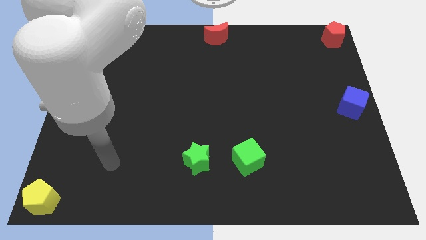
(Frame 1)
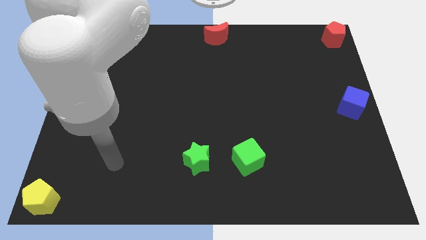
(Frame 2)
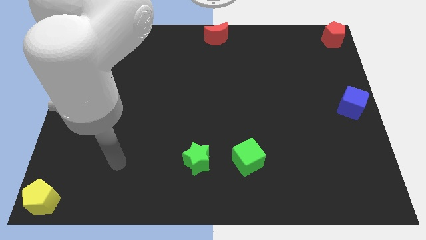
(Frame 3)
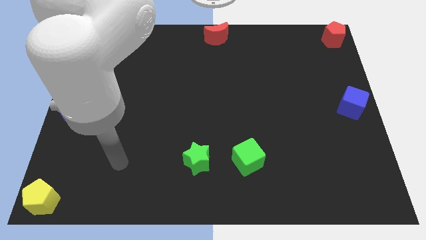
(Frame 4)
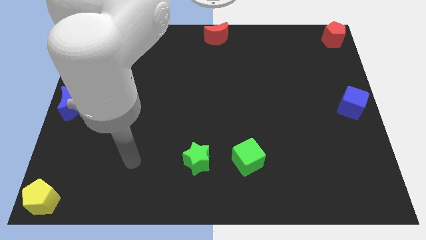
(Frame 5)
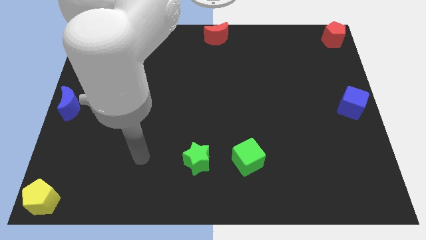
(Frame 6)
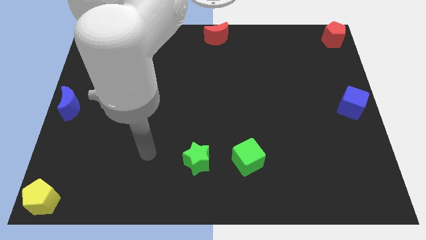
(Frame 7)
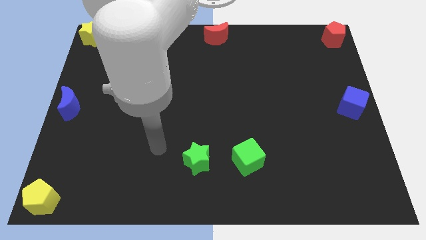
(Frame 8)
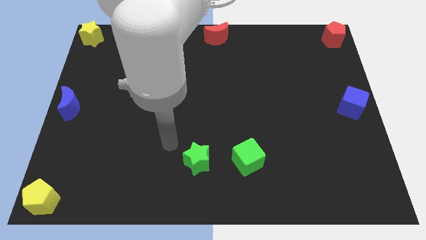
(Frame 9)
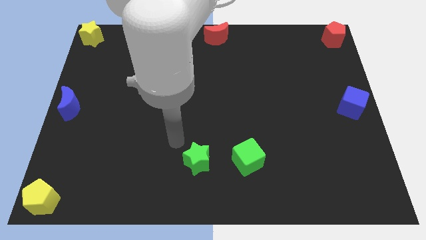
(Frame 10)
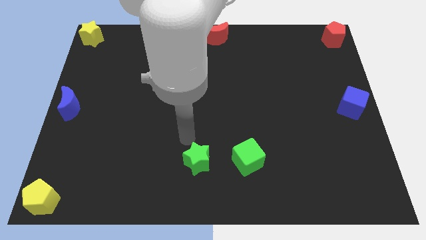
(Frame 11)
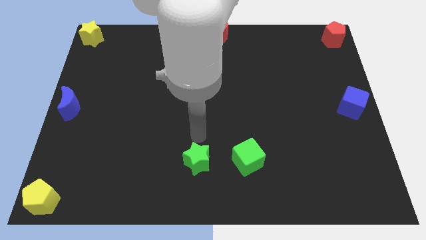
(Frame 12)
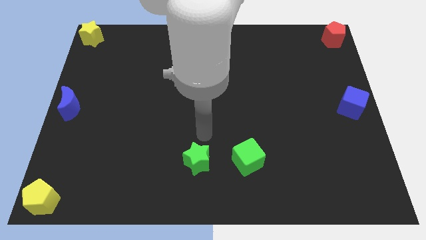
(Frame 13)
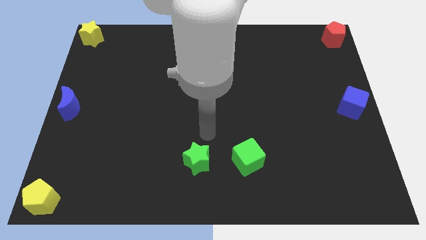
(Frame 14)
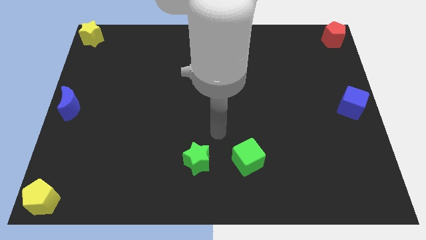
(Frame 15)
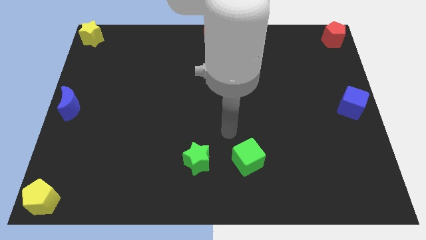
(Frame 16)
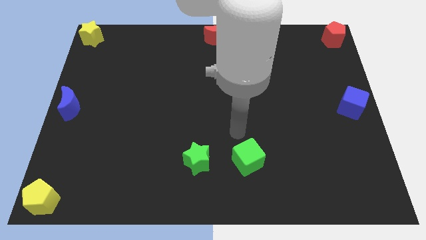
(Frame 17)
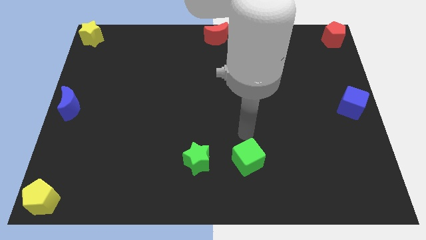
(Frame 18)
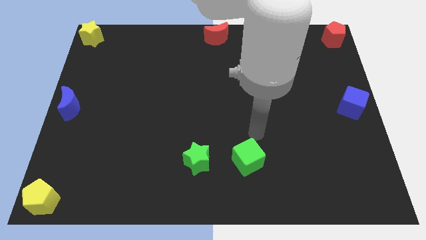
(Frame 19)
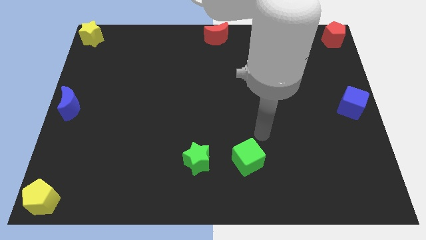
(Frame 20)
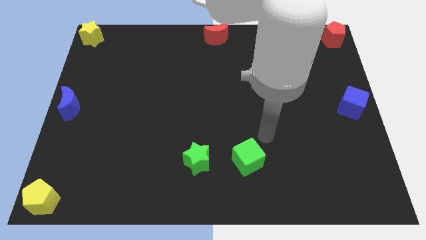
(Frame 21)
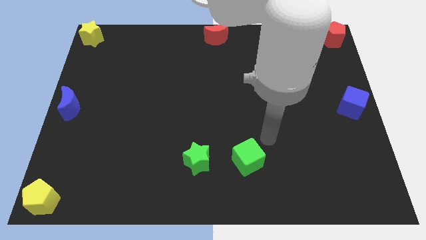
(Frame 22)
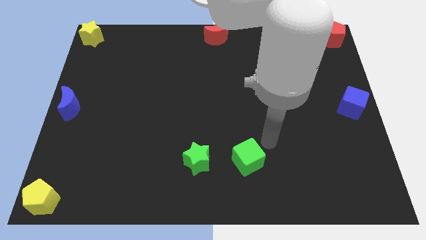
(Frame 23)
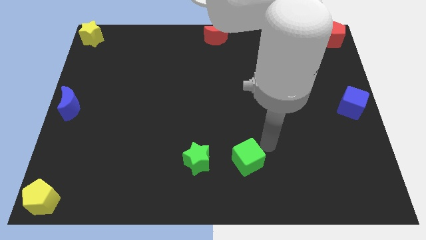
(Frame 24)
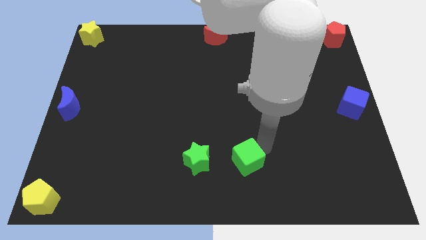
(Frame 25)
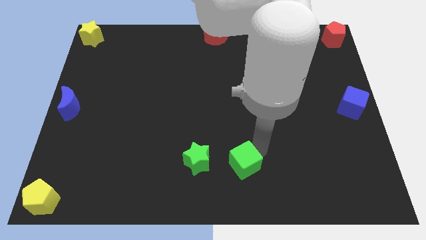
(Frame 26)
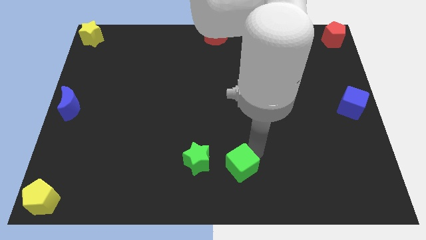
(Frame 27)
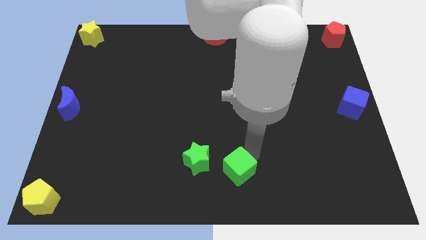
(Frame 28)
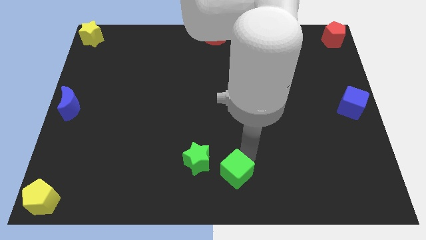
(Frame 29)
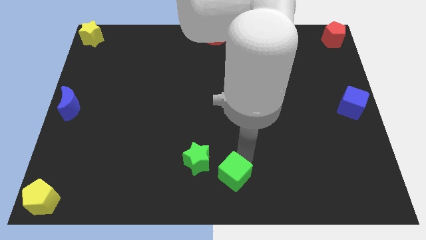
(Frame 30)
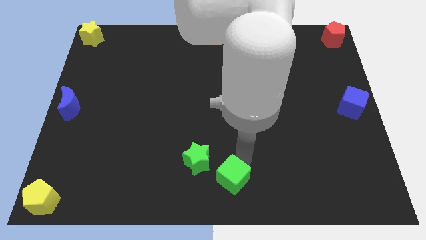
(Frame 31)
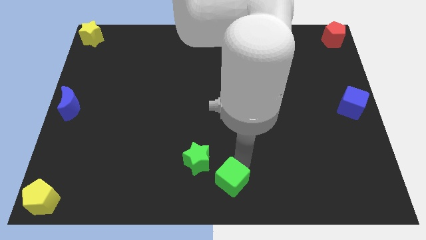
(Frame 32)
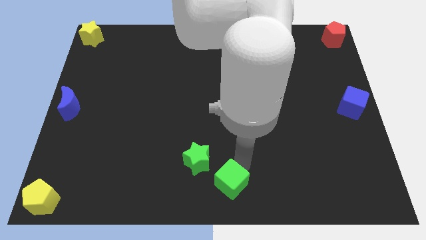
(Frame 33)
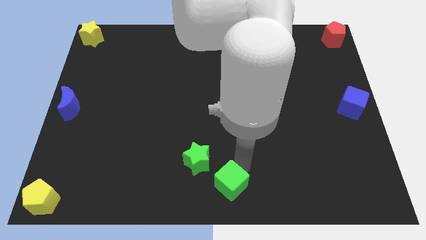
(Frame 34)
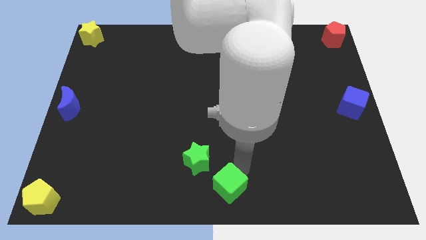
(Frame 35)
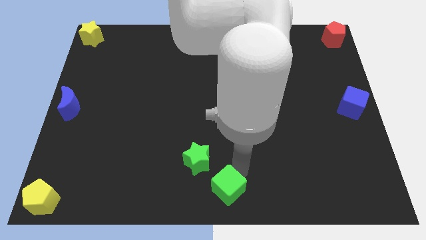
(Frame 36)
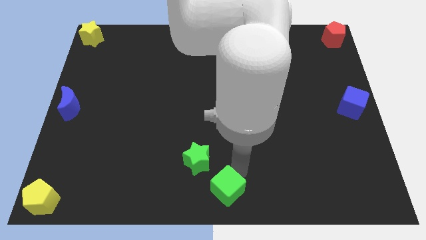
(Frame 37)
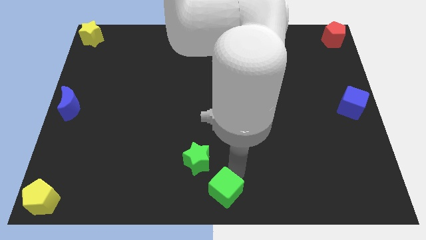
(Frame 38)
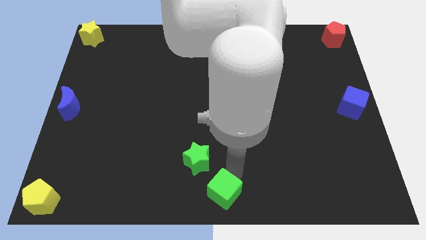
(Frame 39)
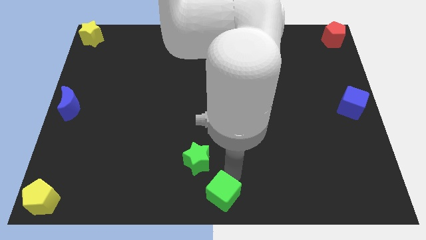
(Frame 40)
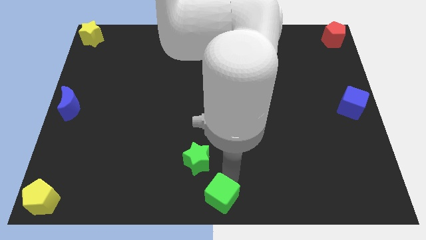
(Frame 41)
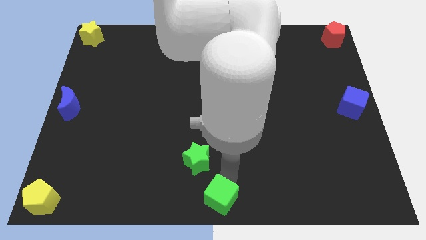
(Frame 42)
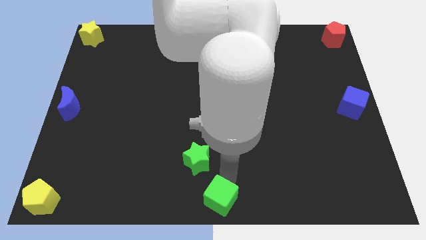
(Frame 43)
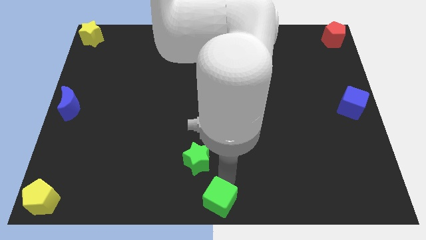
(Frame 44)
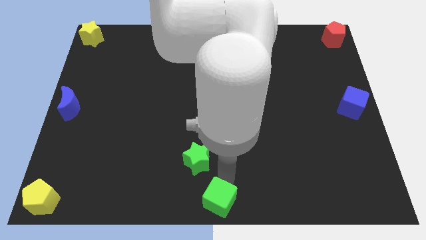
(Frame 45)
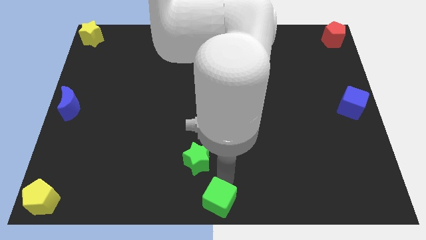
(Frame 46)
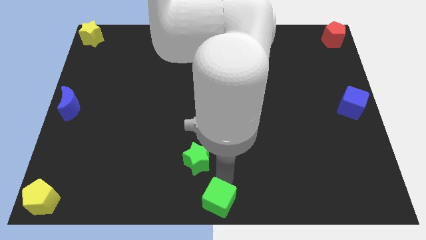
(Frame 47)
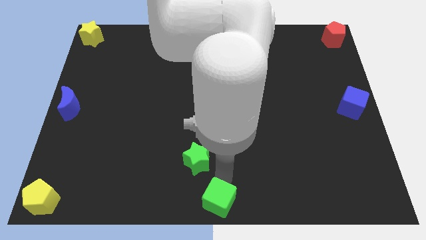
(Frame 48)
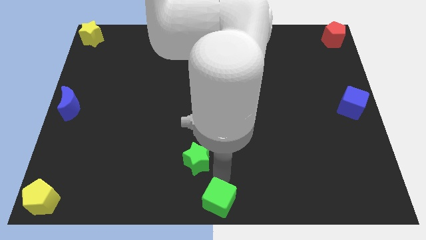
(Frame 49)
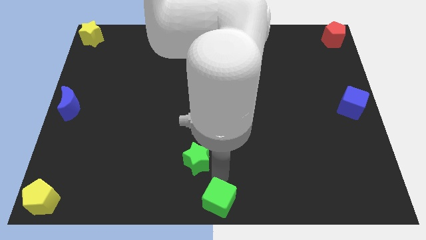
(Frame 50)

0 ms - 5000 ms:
move the green cube towards the bottom center to the board

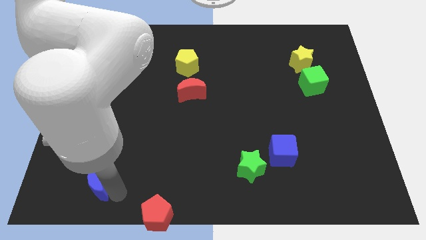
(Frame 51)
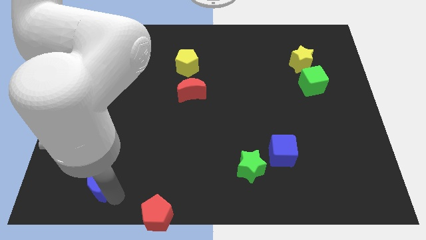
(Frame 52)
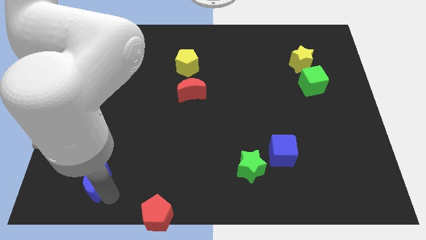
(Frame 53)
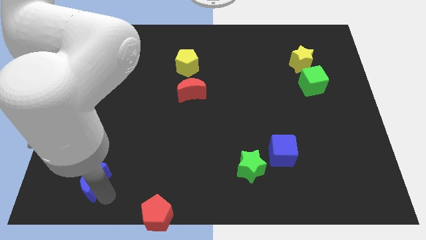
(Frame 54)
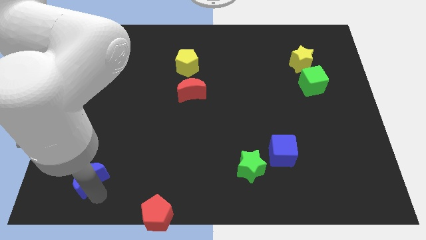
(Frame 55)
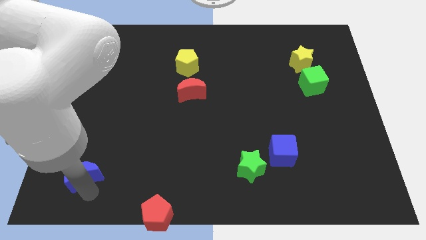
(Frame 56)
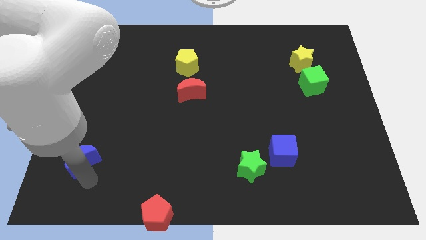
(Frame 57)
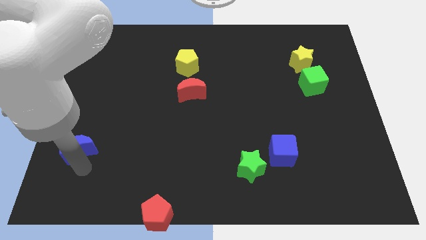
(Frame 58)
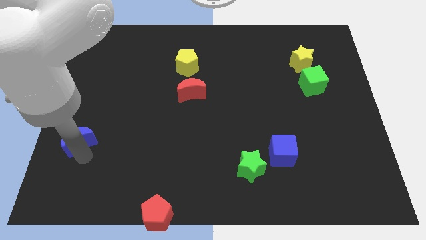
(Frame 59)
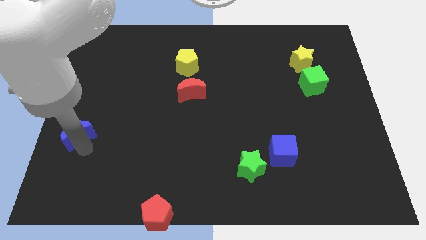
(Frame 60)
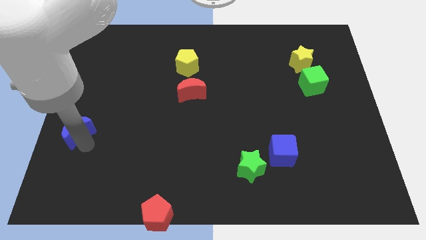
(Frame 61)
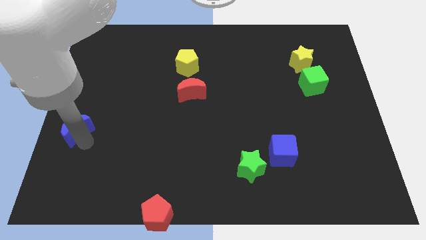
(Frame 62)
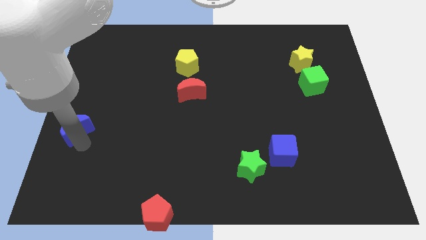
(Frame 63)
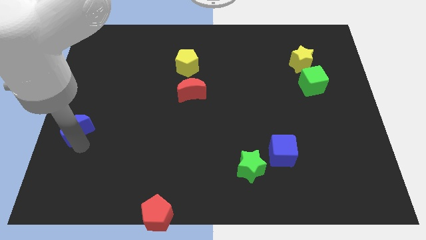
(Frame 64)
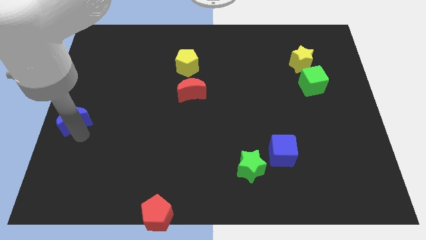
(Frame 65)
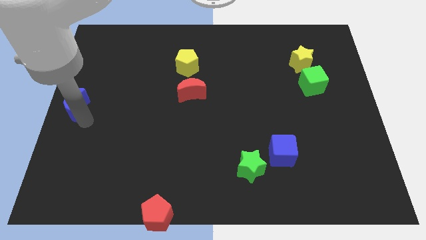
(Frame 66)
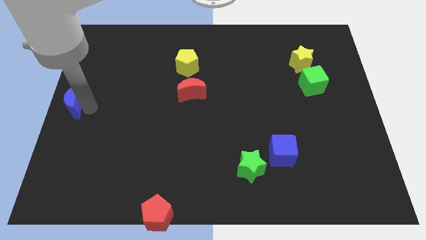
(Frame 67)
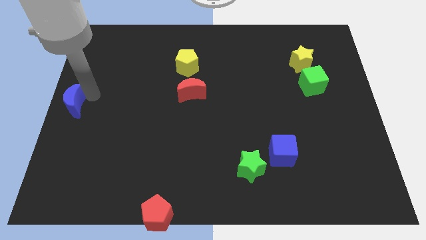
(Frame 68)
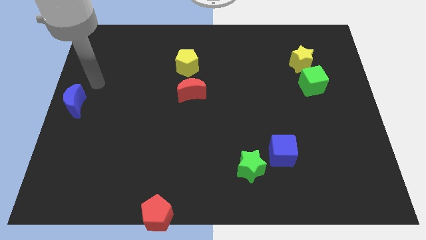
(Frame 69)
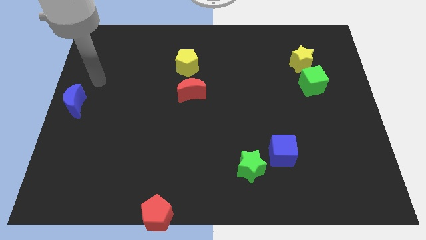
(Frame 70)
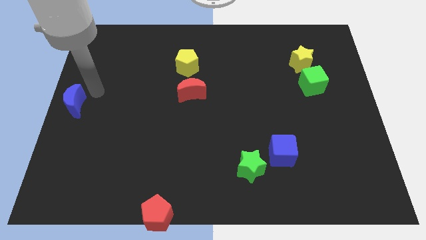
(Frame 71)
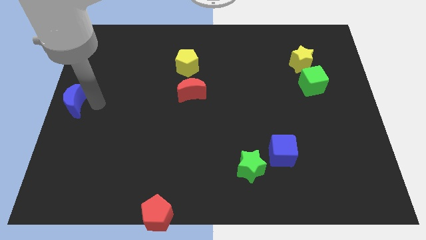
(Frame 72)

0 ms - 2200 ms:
move the blue moon to the left center

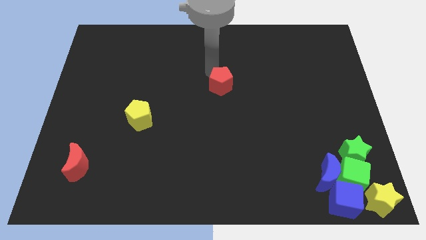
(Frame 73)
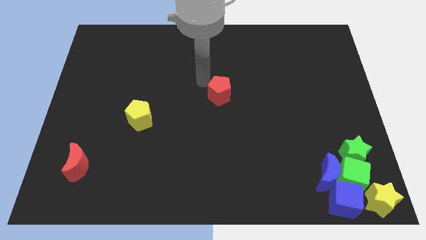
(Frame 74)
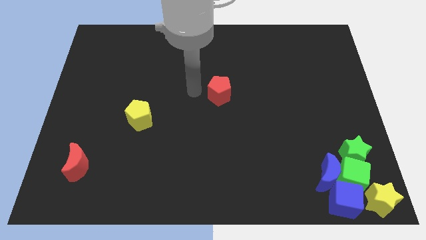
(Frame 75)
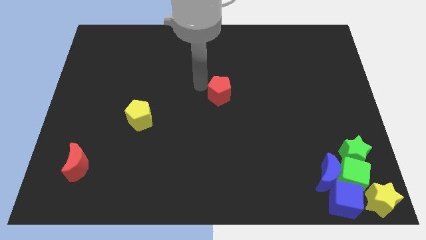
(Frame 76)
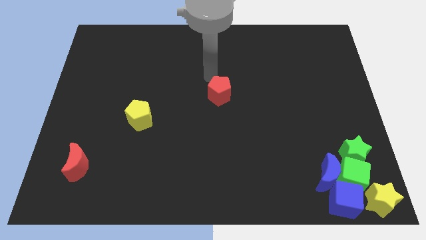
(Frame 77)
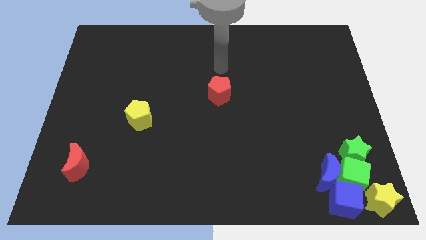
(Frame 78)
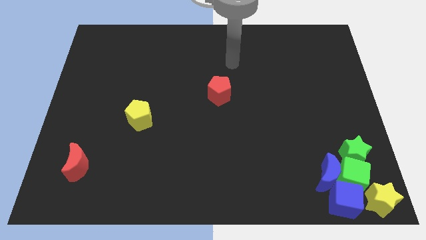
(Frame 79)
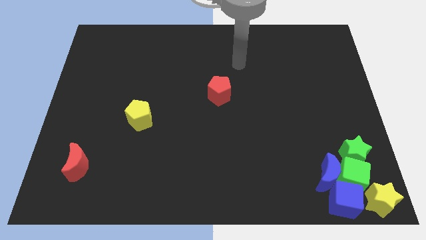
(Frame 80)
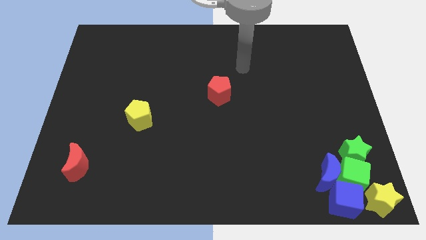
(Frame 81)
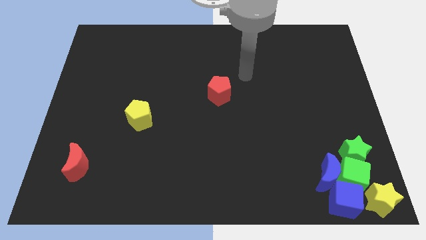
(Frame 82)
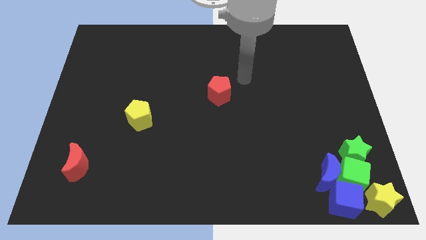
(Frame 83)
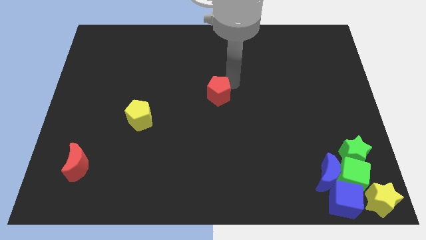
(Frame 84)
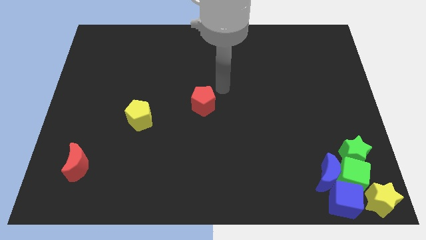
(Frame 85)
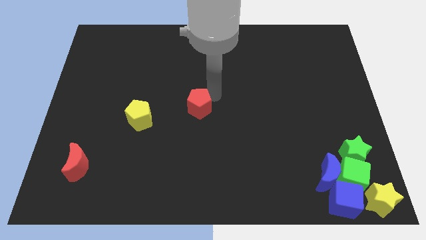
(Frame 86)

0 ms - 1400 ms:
move the red pentagon diagonally right to the yellow pentagon

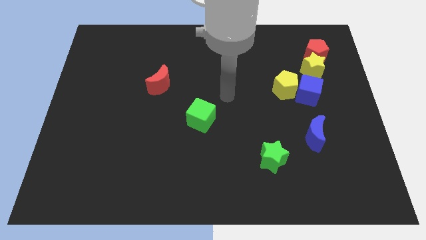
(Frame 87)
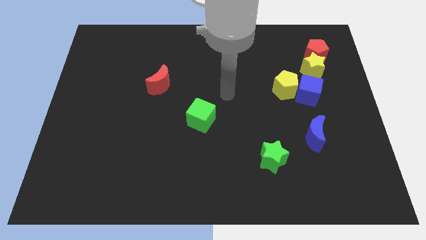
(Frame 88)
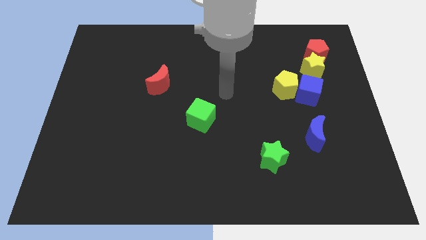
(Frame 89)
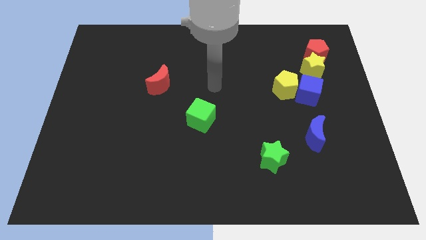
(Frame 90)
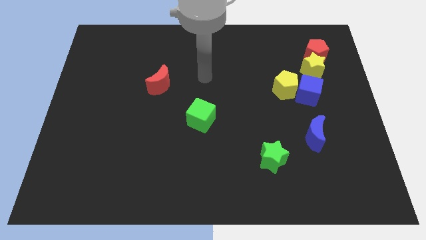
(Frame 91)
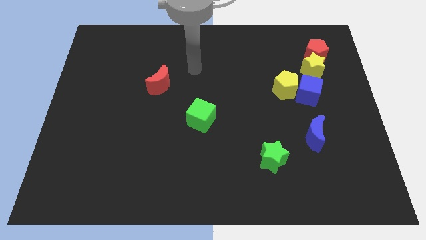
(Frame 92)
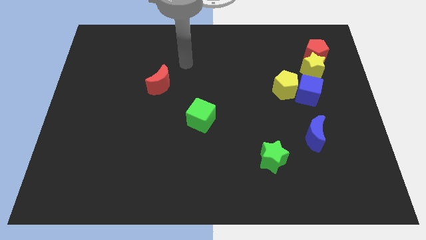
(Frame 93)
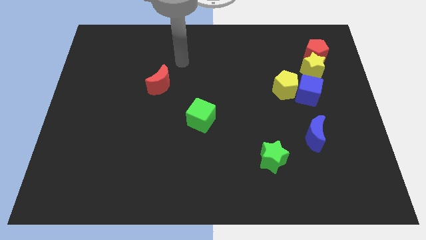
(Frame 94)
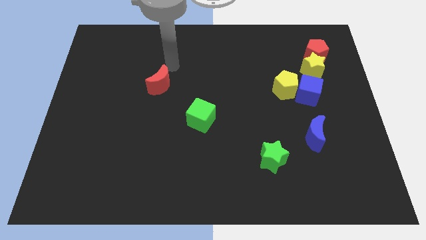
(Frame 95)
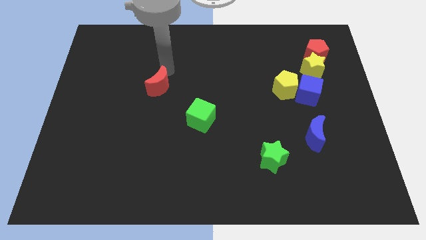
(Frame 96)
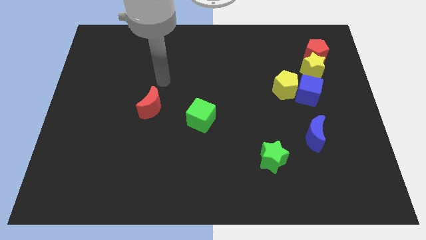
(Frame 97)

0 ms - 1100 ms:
push the red crescent slightly to the bottom
